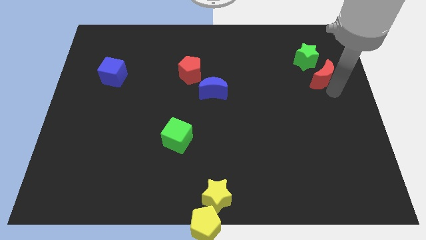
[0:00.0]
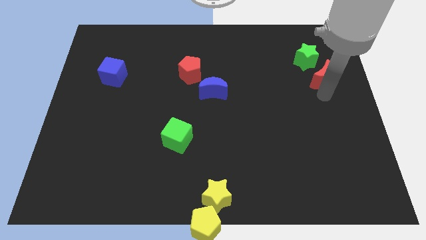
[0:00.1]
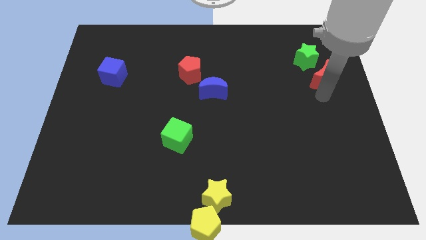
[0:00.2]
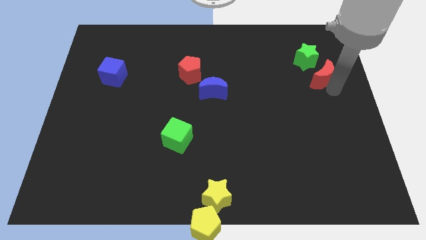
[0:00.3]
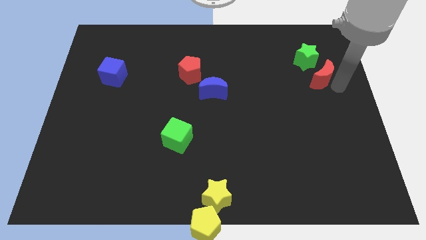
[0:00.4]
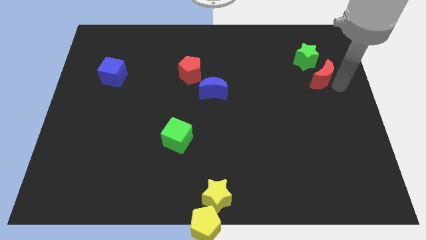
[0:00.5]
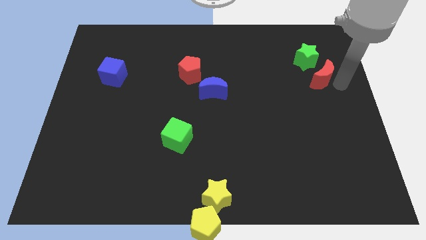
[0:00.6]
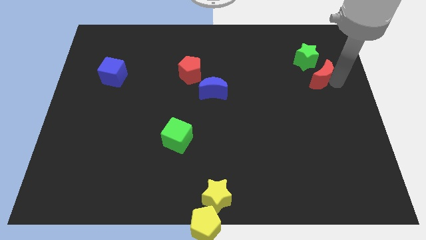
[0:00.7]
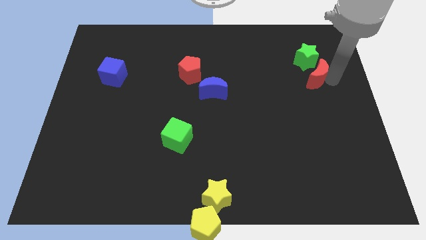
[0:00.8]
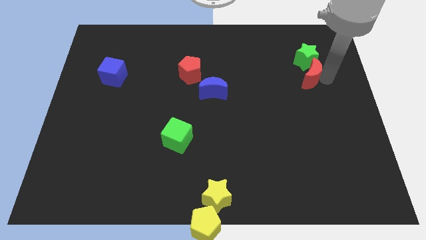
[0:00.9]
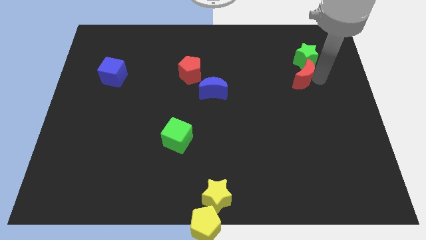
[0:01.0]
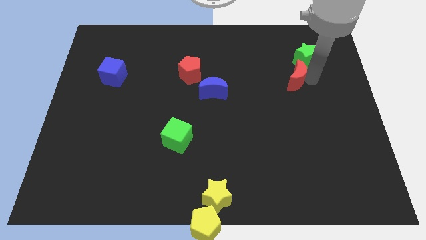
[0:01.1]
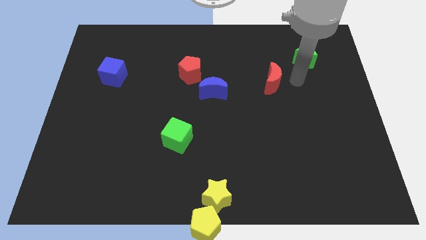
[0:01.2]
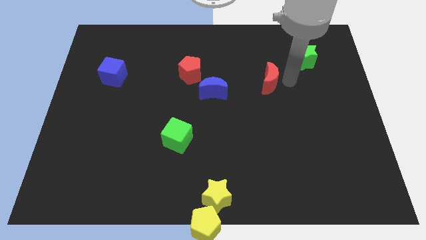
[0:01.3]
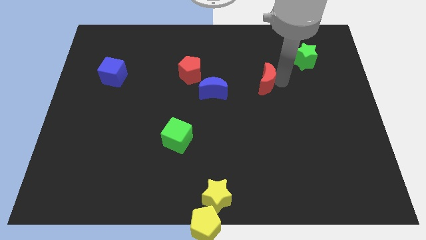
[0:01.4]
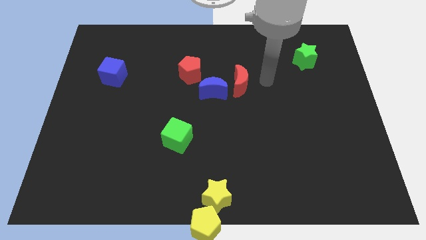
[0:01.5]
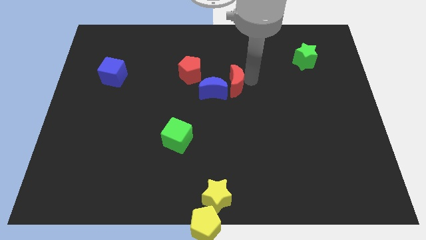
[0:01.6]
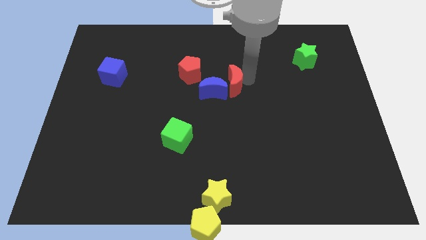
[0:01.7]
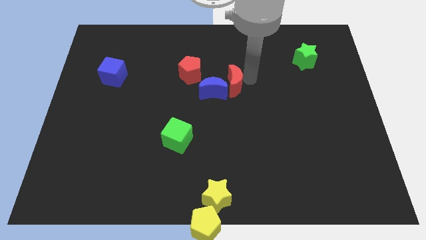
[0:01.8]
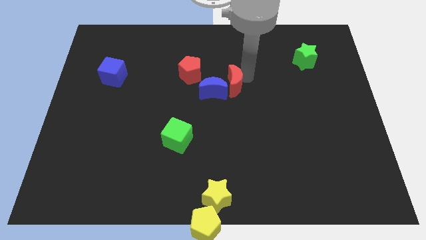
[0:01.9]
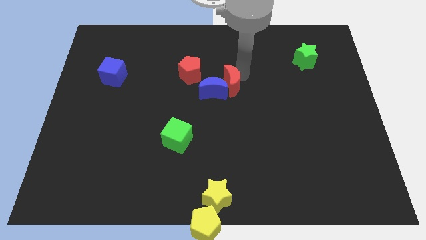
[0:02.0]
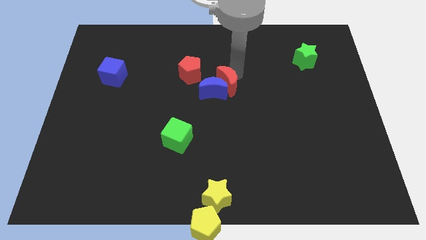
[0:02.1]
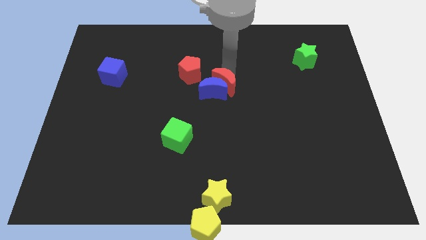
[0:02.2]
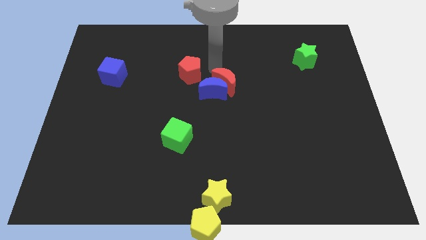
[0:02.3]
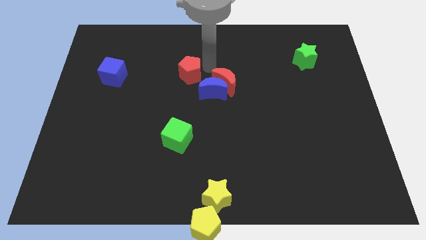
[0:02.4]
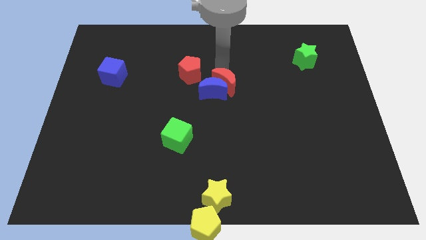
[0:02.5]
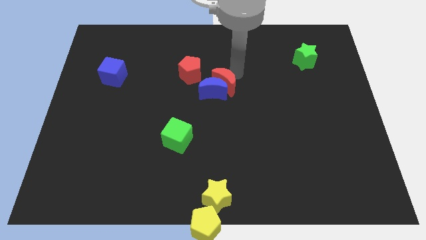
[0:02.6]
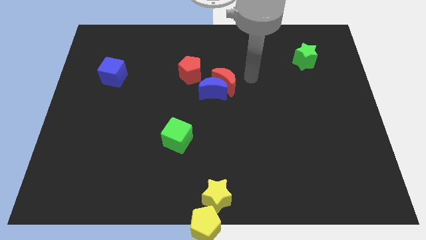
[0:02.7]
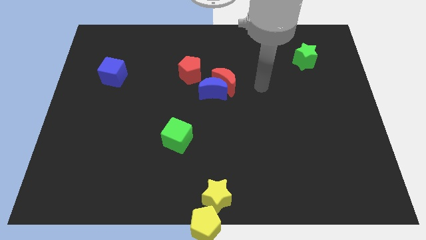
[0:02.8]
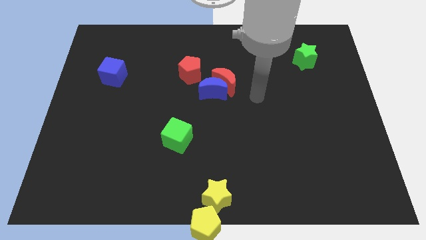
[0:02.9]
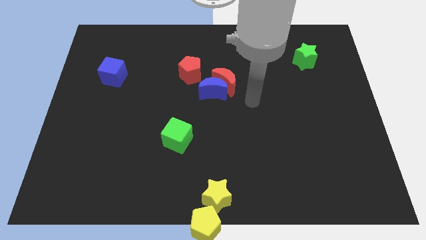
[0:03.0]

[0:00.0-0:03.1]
slide red moon into blue moon

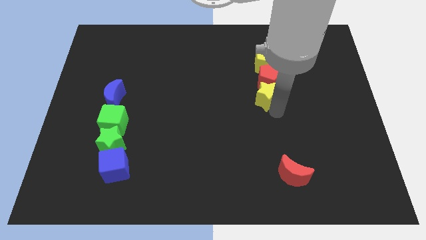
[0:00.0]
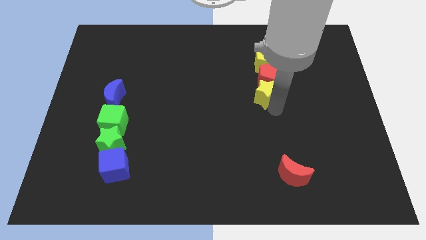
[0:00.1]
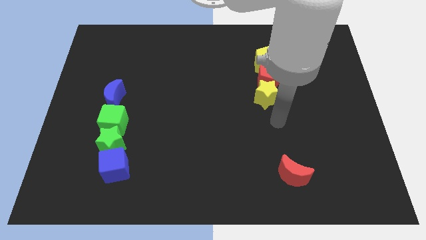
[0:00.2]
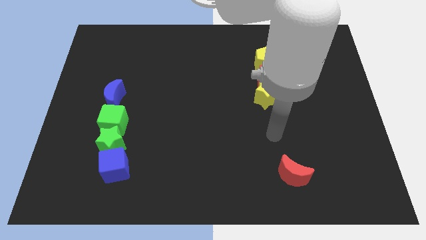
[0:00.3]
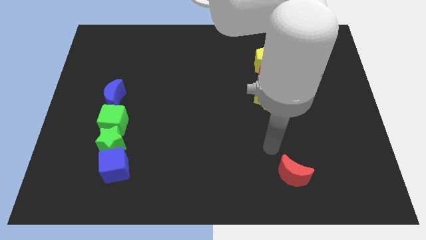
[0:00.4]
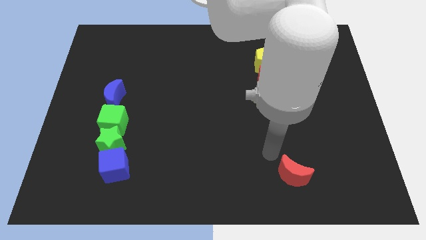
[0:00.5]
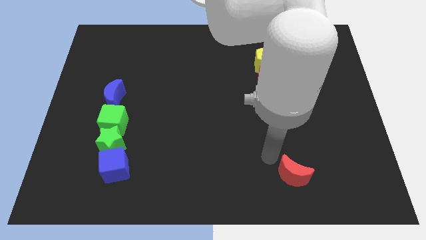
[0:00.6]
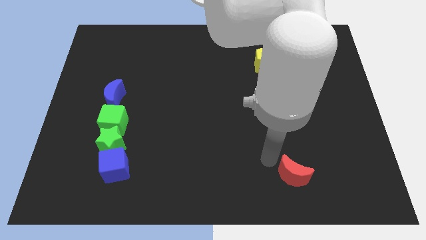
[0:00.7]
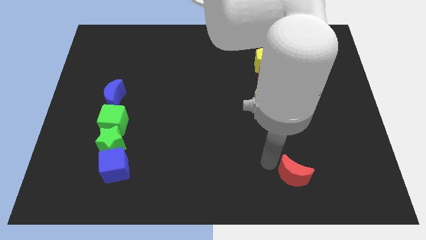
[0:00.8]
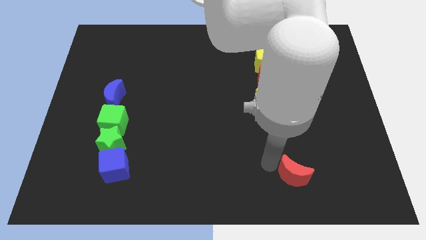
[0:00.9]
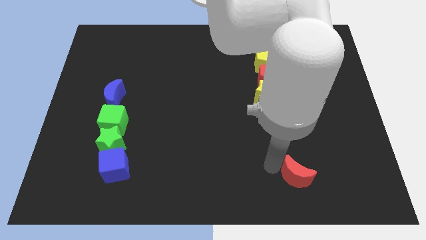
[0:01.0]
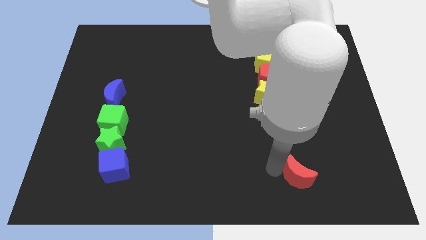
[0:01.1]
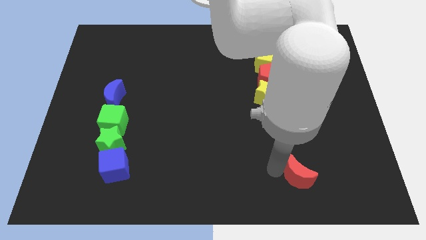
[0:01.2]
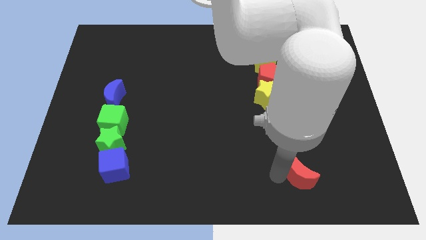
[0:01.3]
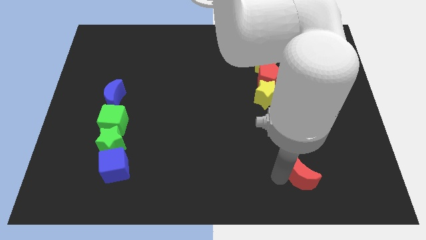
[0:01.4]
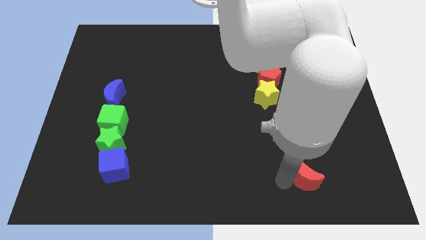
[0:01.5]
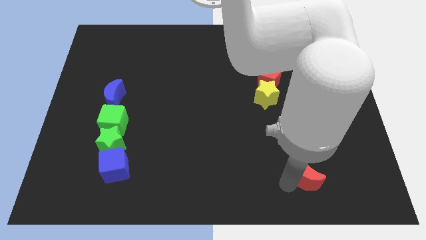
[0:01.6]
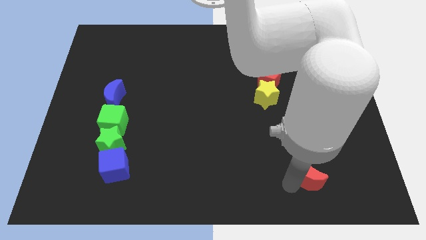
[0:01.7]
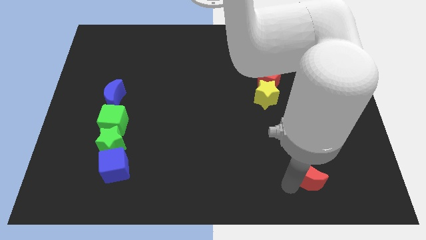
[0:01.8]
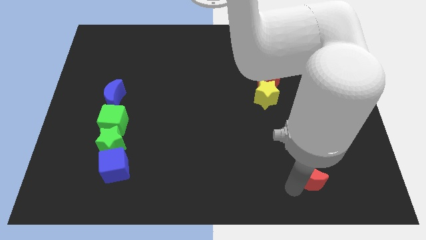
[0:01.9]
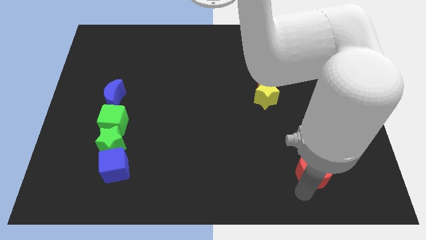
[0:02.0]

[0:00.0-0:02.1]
slightly move the red moon towards the right

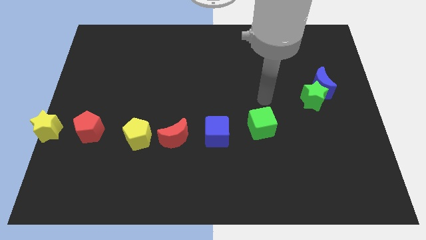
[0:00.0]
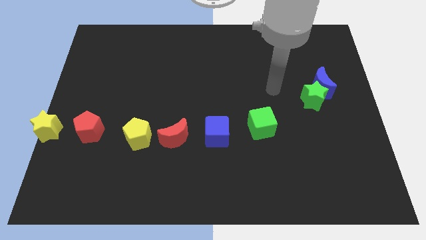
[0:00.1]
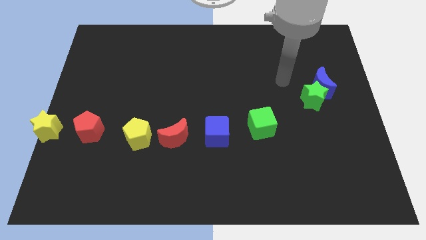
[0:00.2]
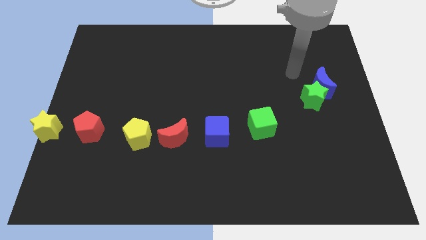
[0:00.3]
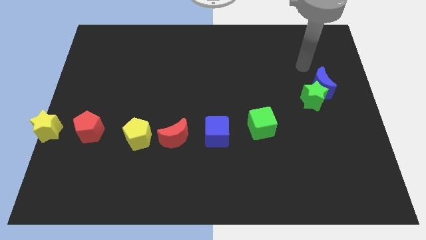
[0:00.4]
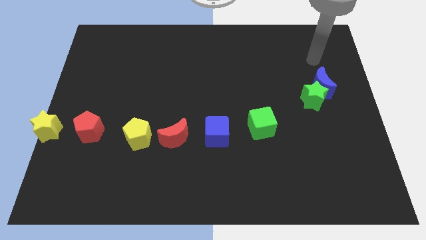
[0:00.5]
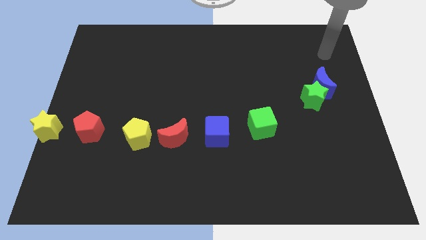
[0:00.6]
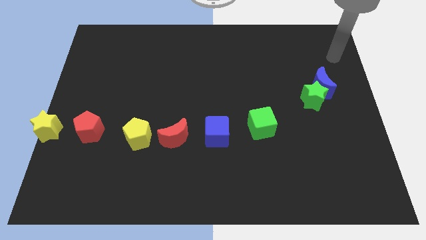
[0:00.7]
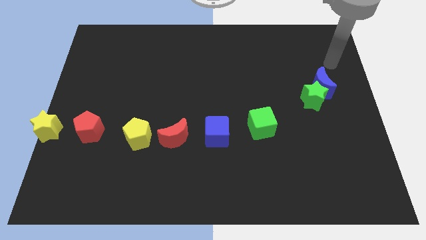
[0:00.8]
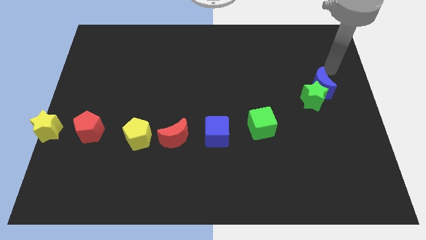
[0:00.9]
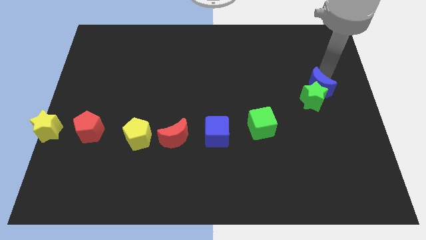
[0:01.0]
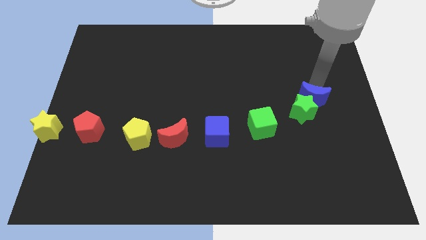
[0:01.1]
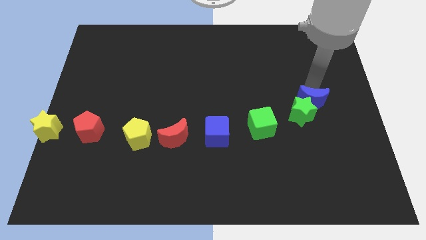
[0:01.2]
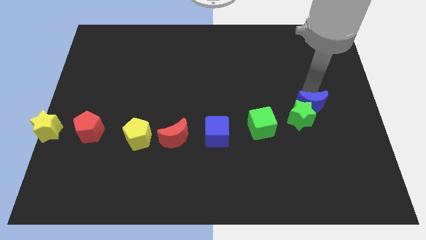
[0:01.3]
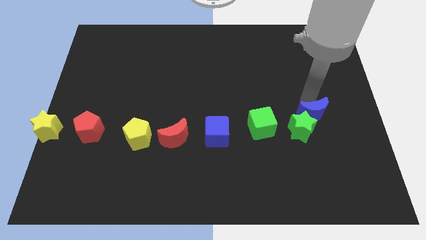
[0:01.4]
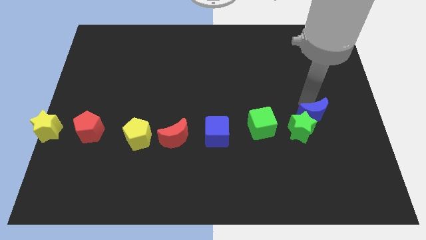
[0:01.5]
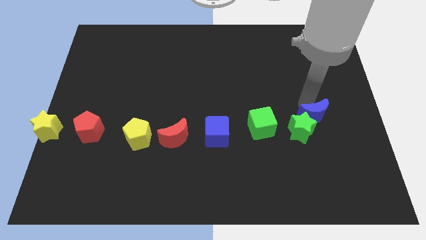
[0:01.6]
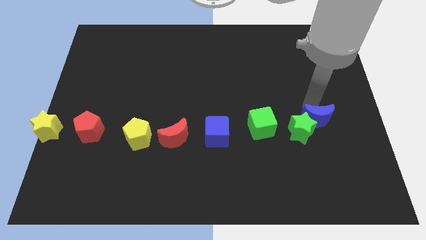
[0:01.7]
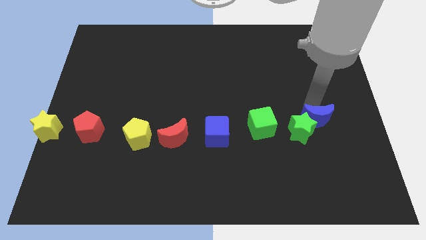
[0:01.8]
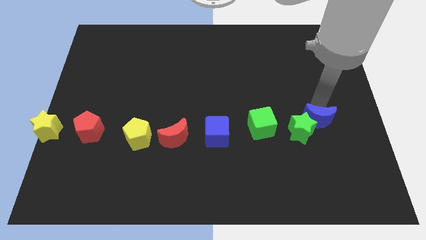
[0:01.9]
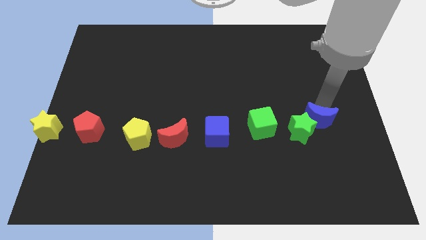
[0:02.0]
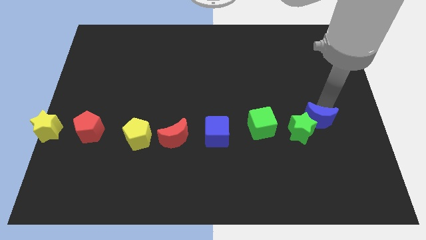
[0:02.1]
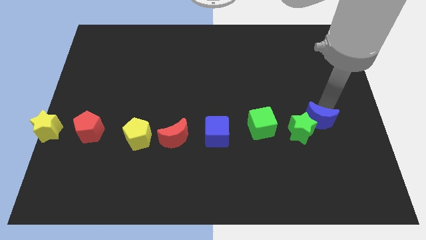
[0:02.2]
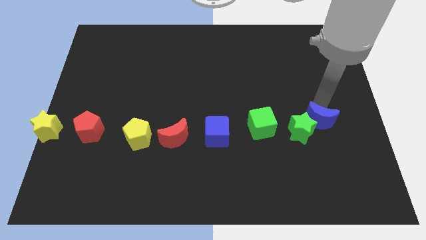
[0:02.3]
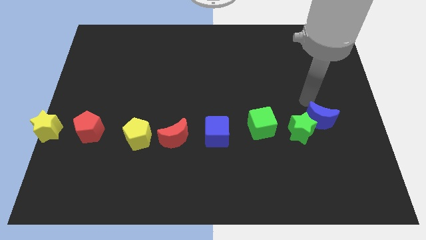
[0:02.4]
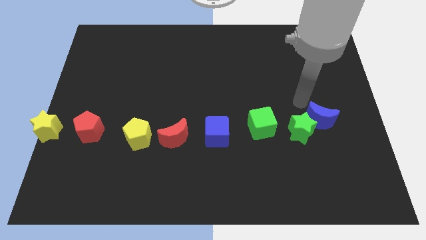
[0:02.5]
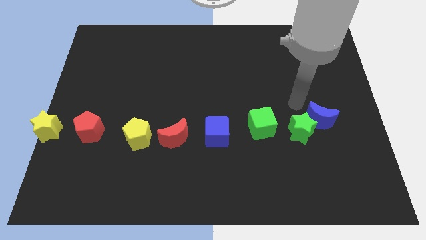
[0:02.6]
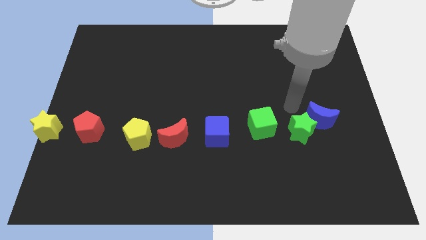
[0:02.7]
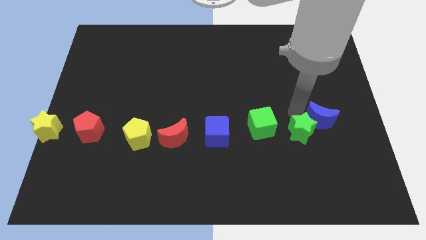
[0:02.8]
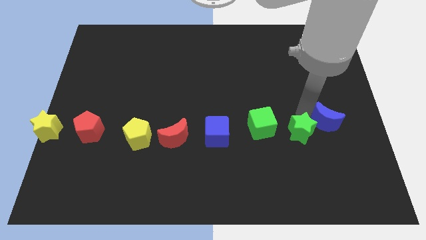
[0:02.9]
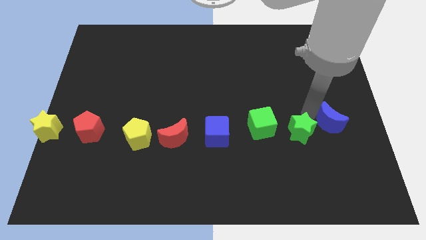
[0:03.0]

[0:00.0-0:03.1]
slide the blue crescent slightly towards down

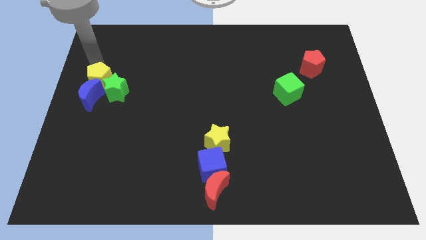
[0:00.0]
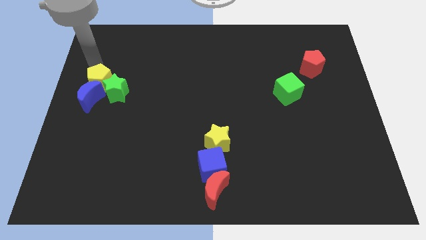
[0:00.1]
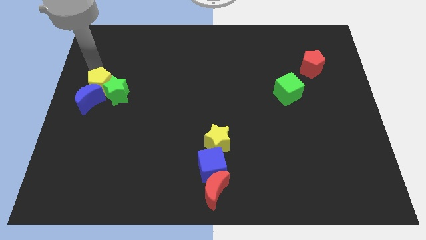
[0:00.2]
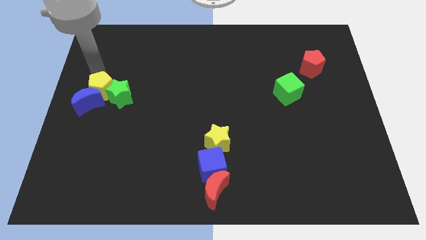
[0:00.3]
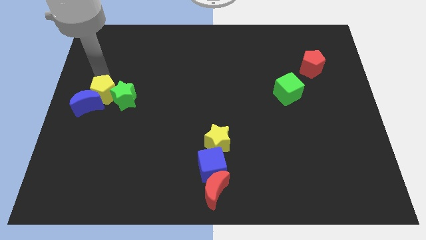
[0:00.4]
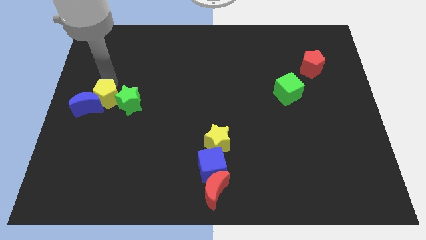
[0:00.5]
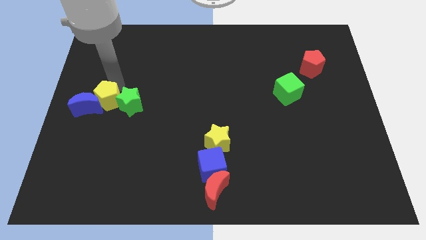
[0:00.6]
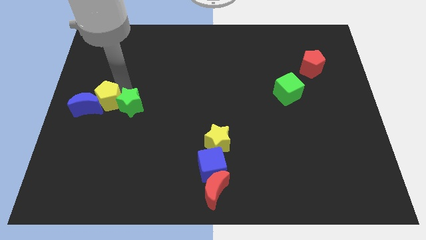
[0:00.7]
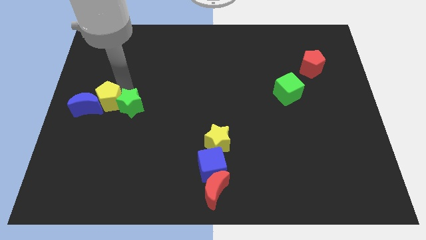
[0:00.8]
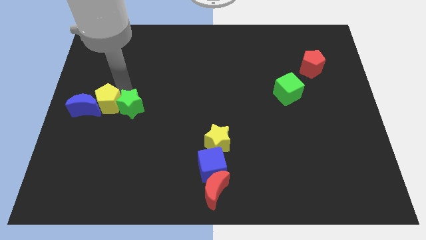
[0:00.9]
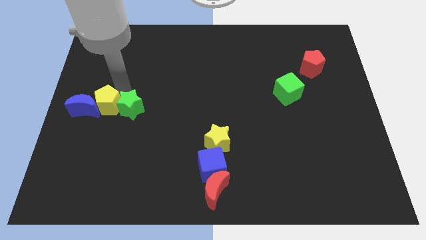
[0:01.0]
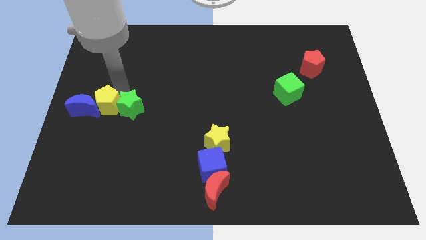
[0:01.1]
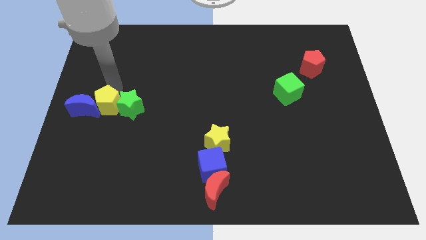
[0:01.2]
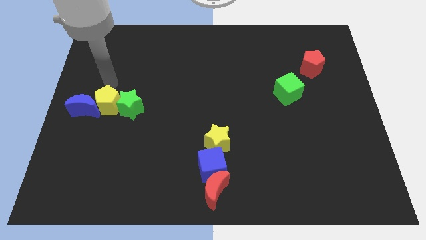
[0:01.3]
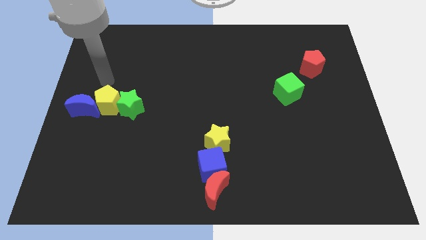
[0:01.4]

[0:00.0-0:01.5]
push group of blocks downwards
